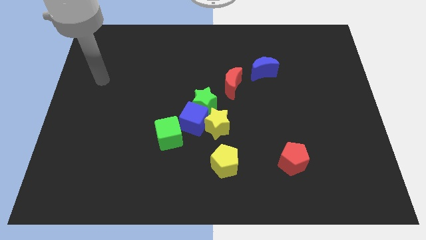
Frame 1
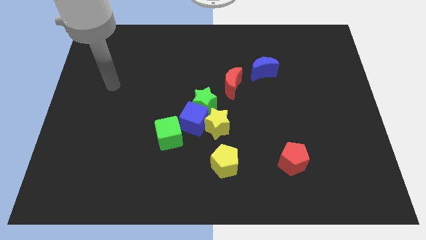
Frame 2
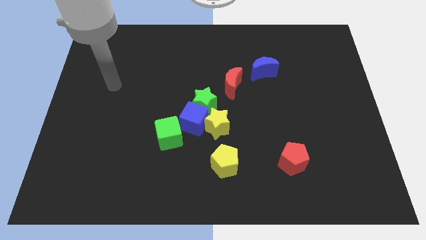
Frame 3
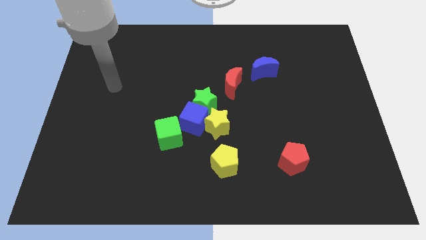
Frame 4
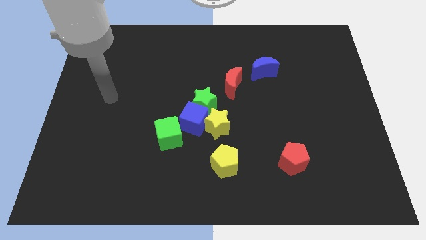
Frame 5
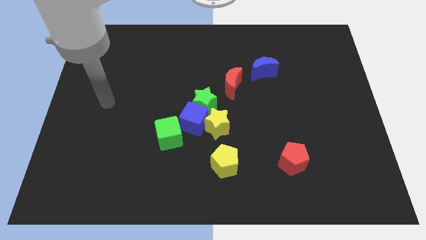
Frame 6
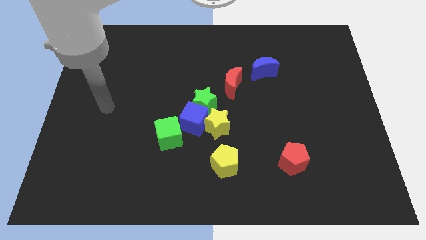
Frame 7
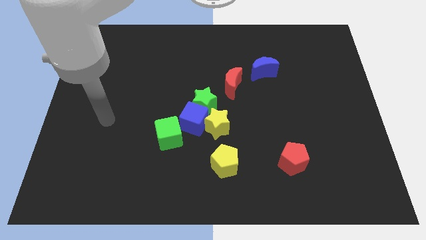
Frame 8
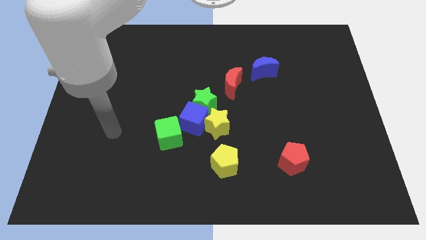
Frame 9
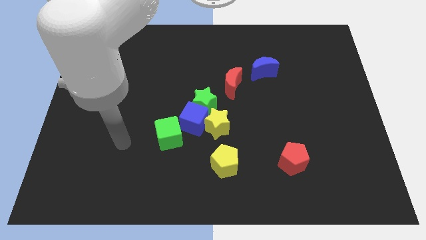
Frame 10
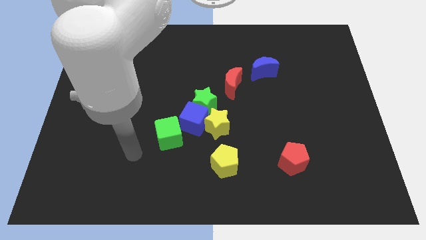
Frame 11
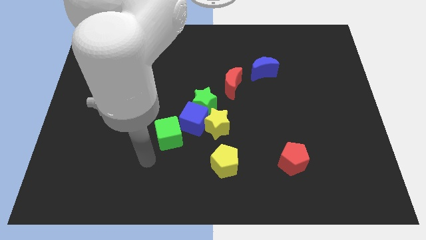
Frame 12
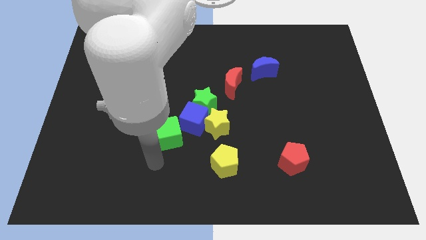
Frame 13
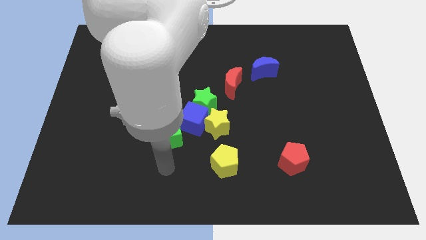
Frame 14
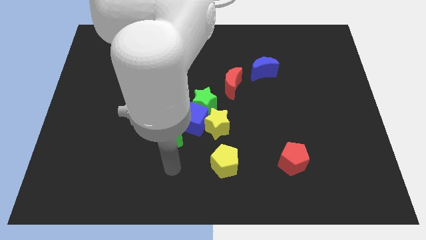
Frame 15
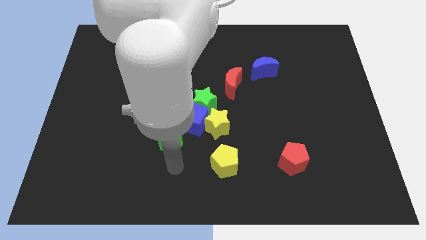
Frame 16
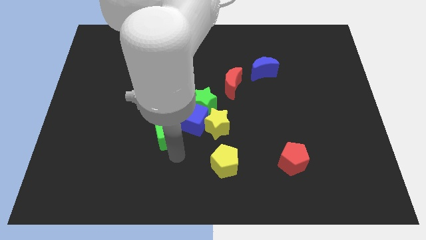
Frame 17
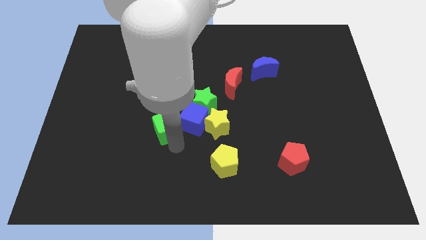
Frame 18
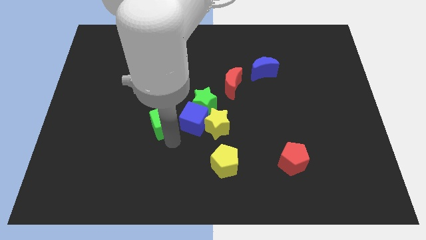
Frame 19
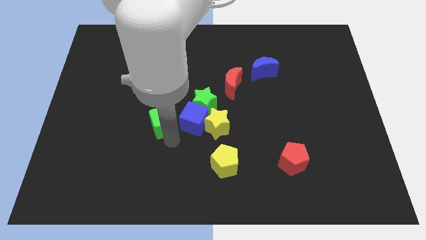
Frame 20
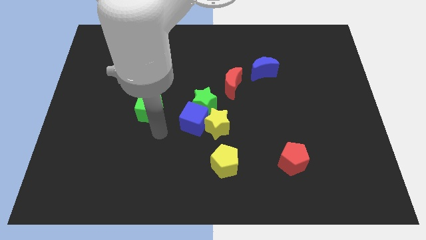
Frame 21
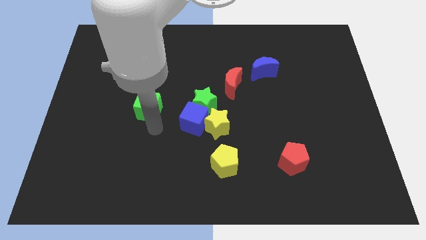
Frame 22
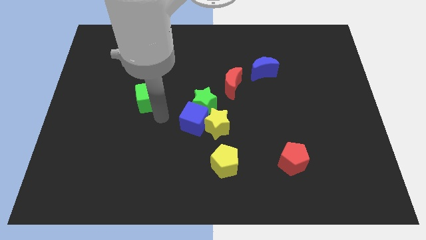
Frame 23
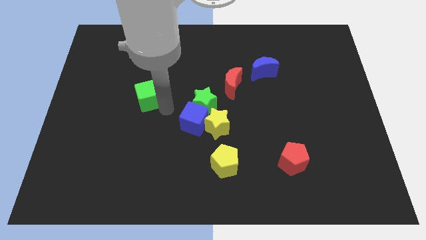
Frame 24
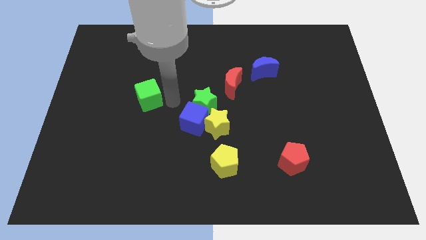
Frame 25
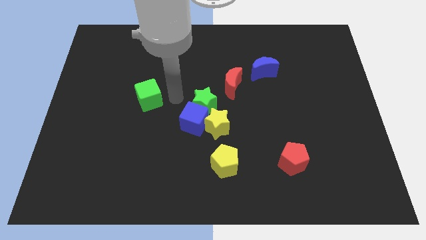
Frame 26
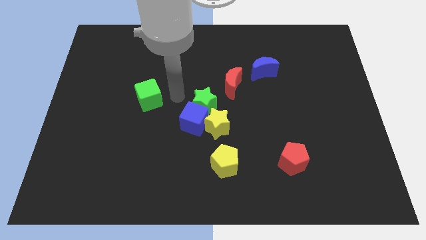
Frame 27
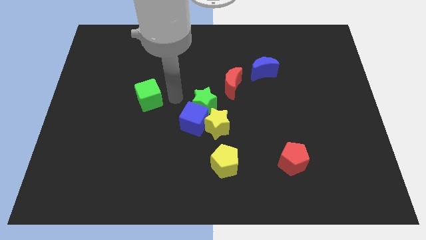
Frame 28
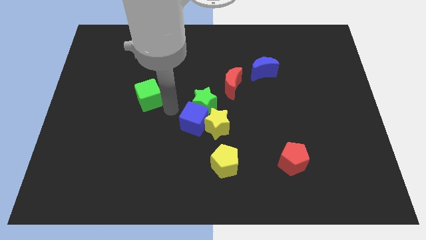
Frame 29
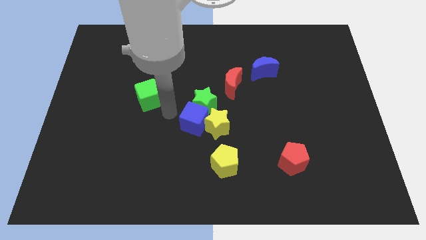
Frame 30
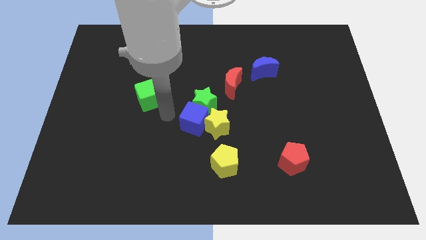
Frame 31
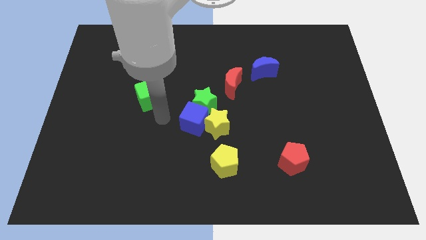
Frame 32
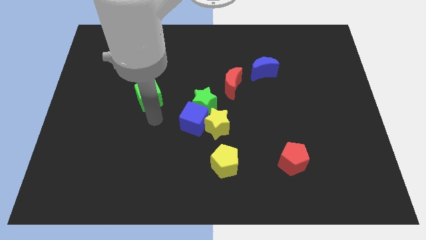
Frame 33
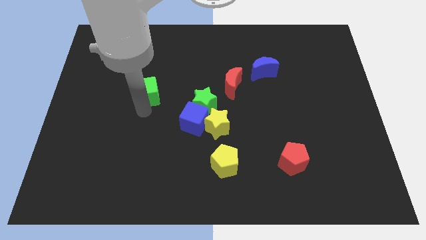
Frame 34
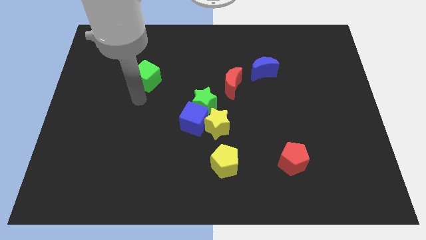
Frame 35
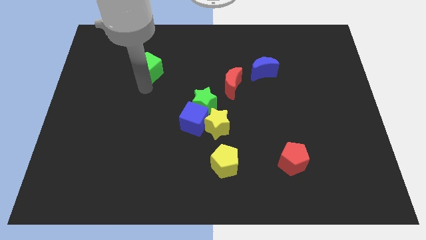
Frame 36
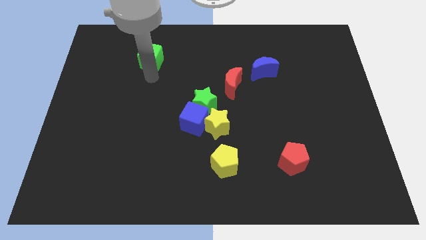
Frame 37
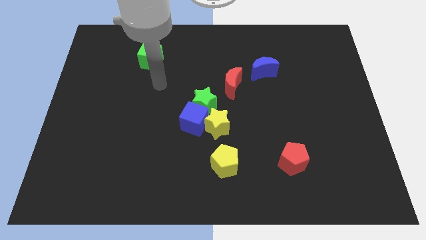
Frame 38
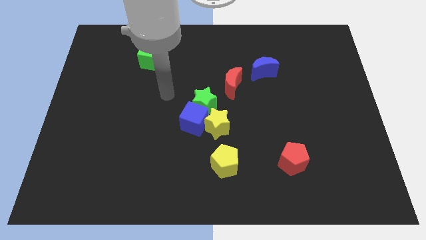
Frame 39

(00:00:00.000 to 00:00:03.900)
push the green cube to the top left of the red crescent

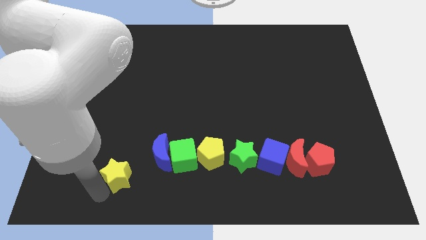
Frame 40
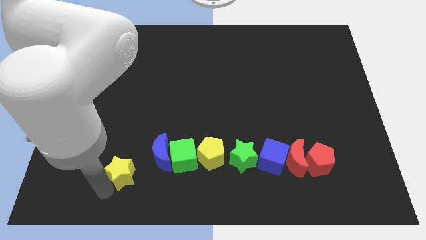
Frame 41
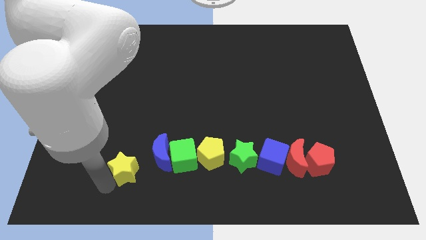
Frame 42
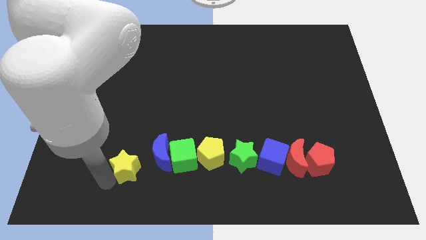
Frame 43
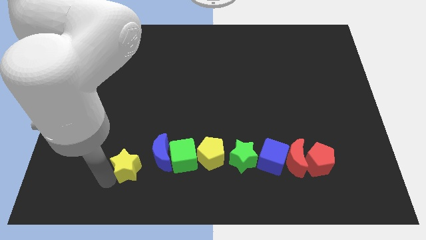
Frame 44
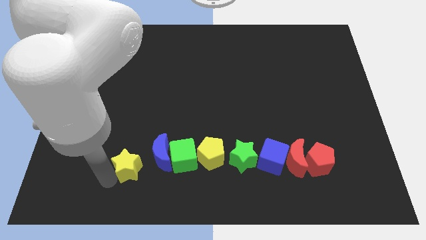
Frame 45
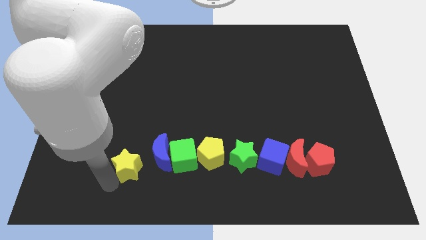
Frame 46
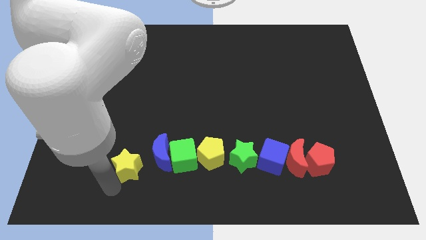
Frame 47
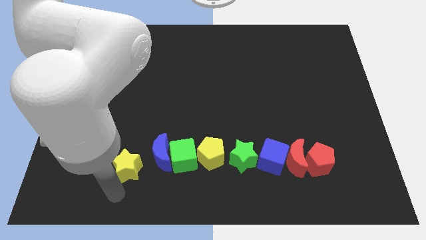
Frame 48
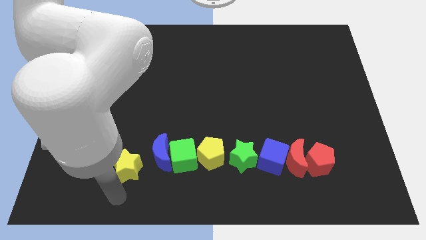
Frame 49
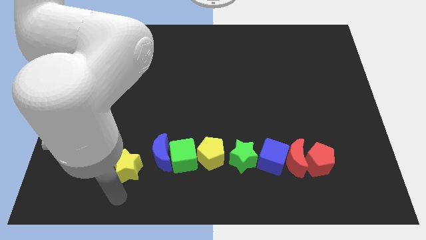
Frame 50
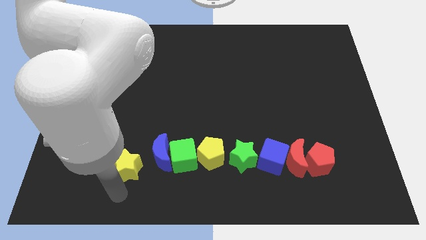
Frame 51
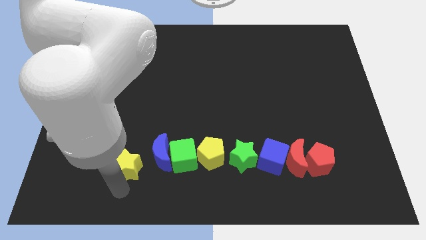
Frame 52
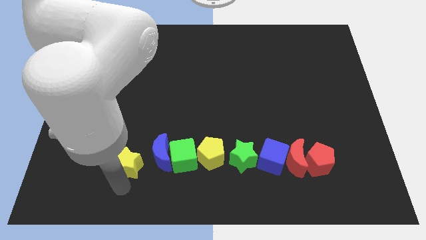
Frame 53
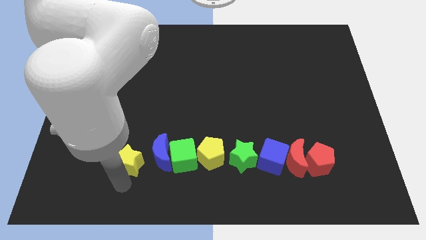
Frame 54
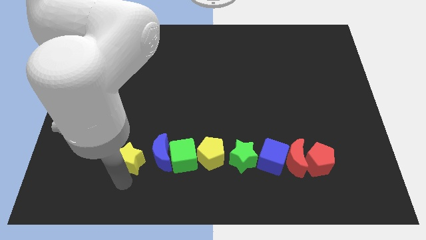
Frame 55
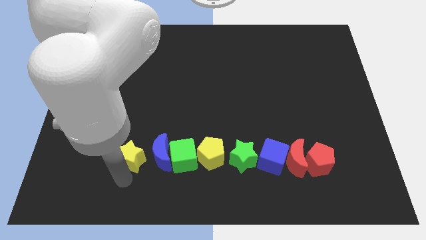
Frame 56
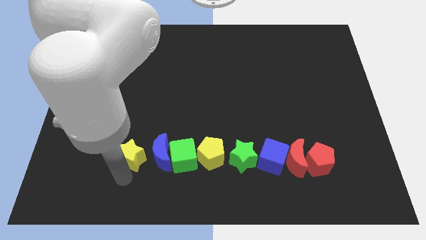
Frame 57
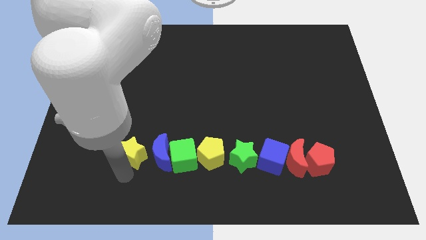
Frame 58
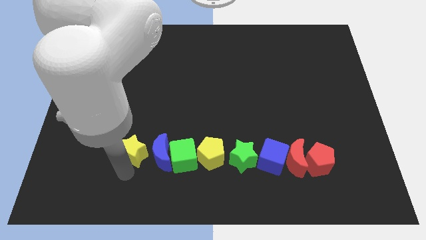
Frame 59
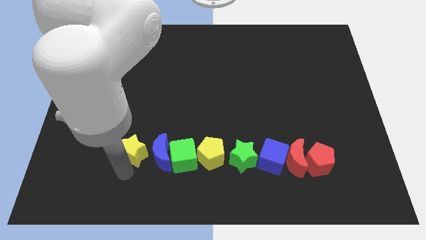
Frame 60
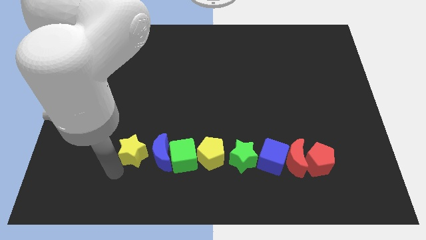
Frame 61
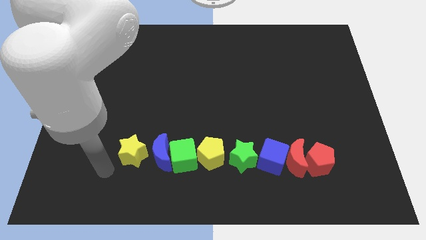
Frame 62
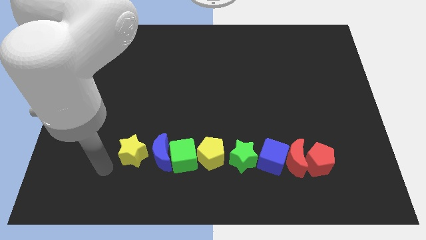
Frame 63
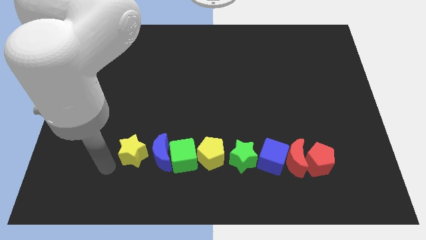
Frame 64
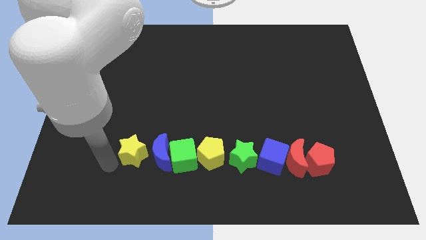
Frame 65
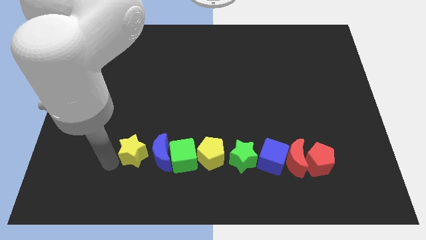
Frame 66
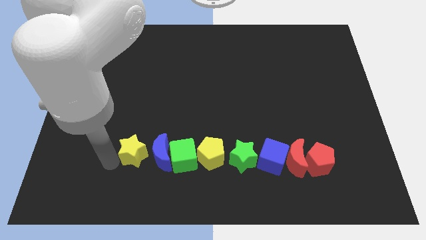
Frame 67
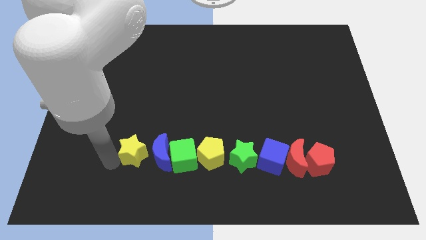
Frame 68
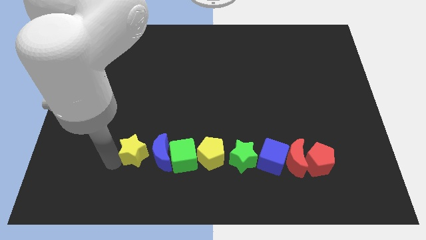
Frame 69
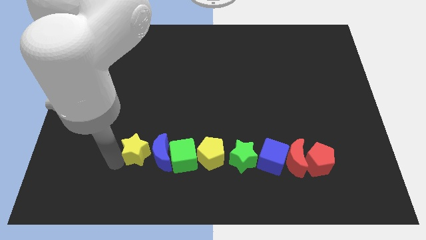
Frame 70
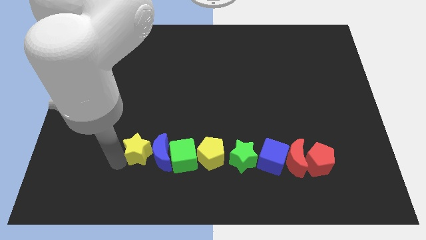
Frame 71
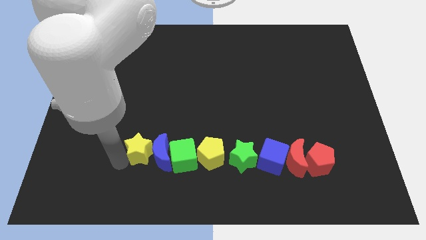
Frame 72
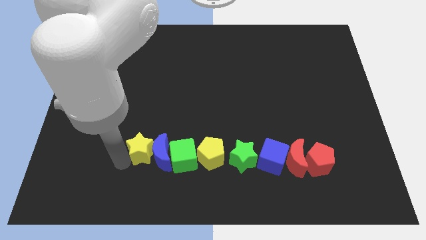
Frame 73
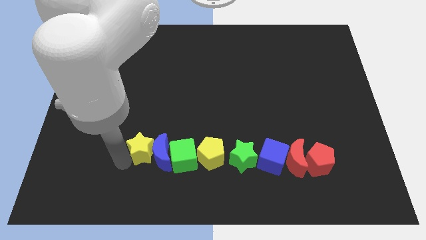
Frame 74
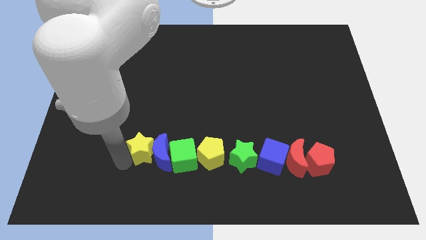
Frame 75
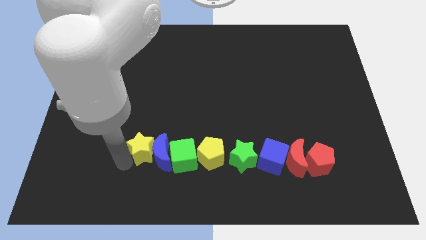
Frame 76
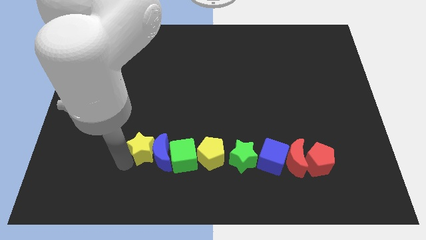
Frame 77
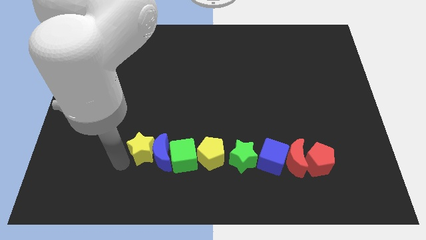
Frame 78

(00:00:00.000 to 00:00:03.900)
push the yellow star towards the parallel to blue crescent

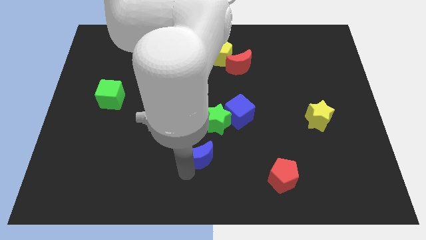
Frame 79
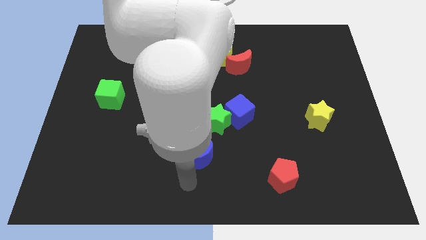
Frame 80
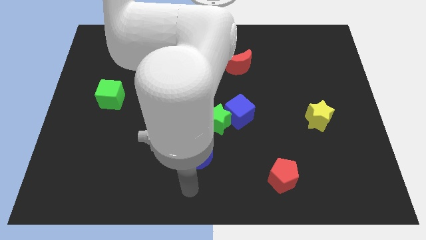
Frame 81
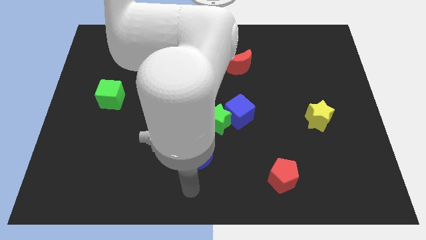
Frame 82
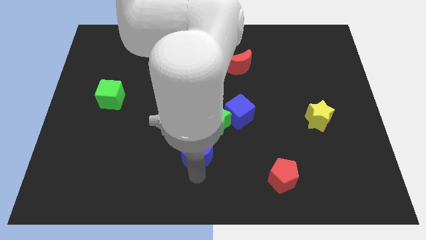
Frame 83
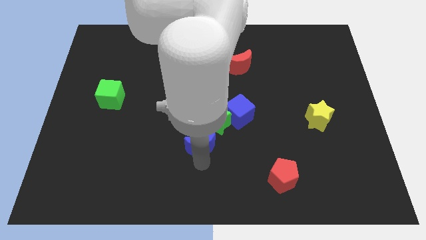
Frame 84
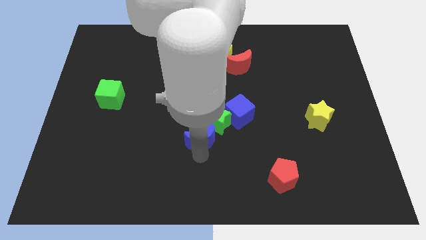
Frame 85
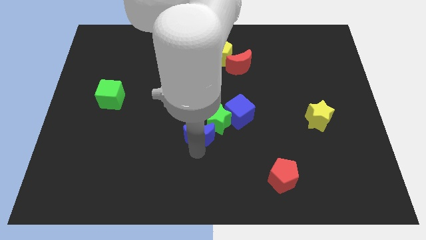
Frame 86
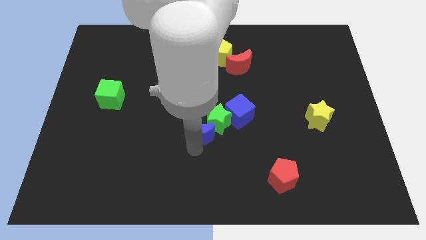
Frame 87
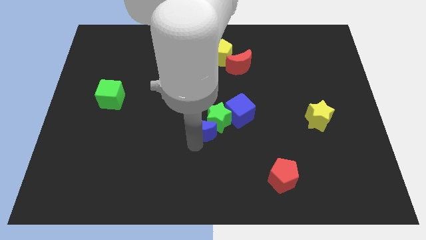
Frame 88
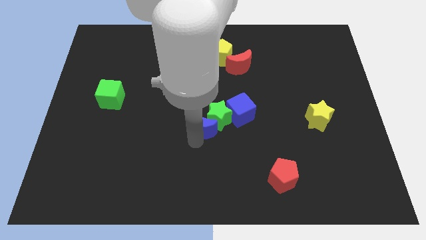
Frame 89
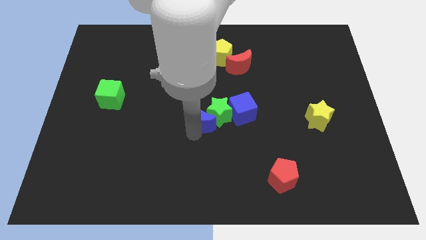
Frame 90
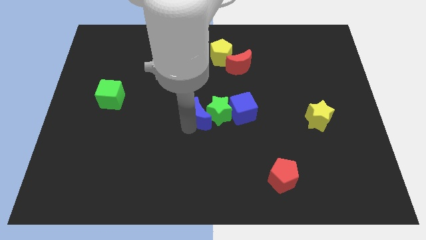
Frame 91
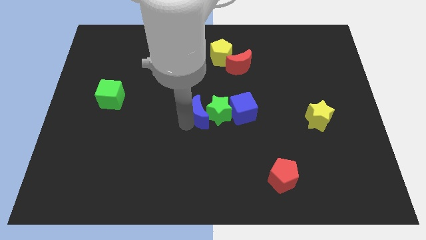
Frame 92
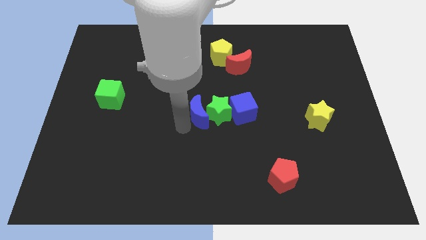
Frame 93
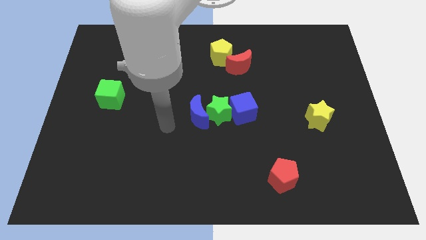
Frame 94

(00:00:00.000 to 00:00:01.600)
drag the blue crescent to the left side of the green star
